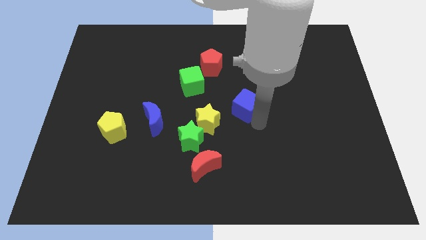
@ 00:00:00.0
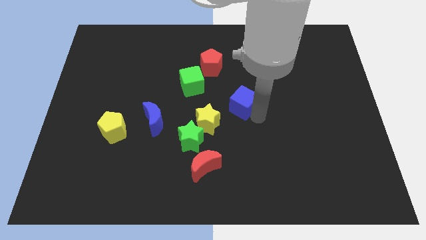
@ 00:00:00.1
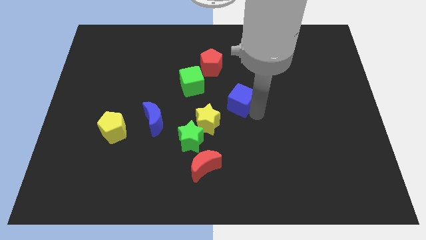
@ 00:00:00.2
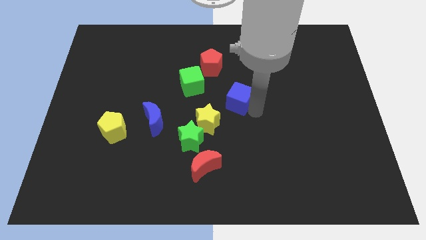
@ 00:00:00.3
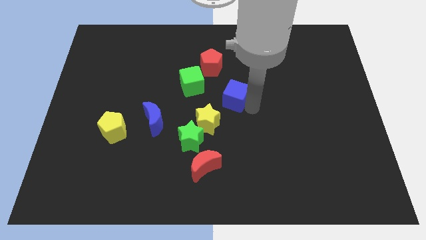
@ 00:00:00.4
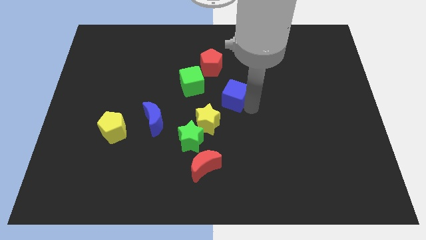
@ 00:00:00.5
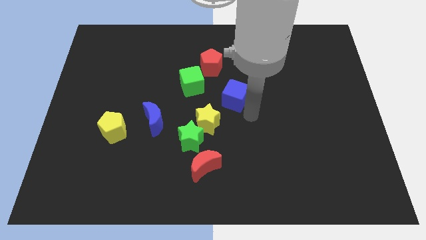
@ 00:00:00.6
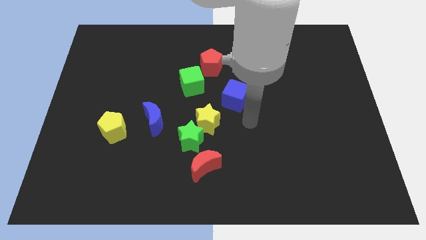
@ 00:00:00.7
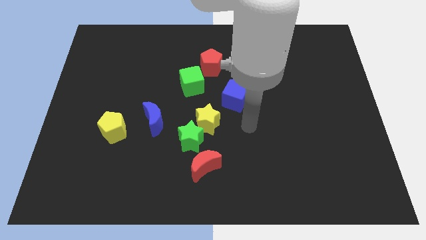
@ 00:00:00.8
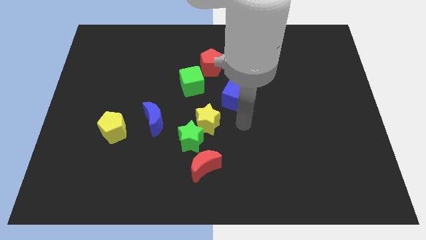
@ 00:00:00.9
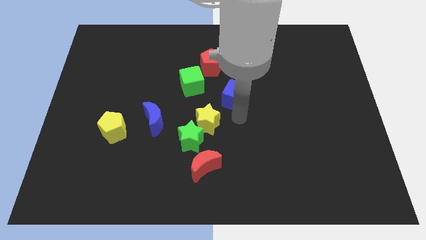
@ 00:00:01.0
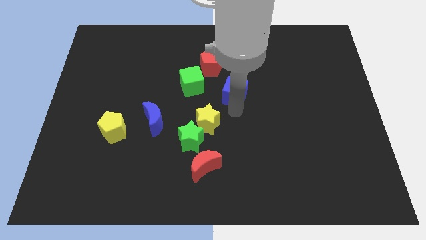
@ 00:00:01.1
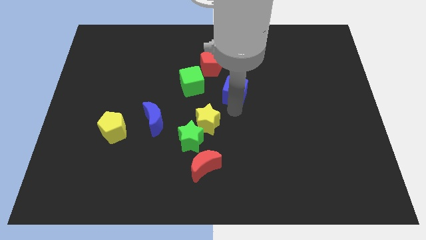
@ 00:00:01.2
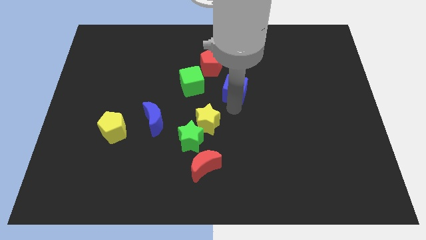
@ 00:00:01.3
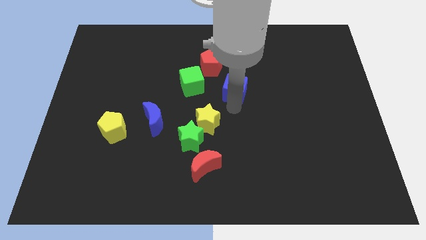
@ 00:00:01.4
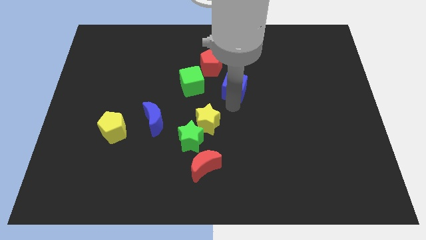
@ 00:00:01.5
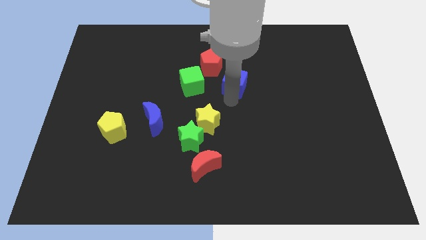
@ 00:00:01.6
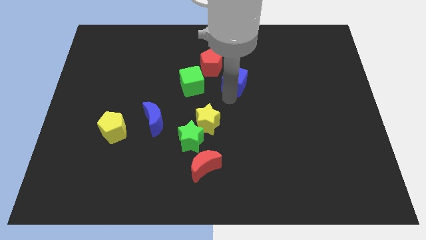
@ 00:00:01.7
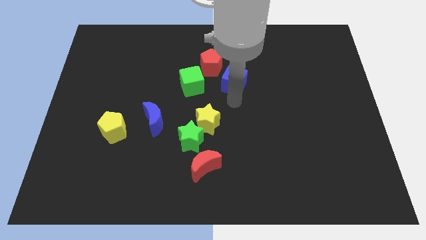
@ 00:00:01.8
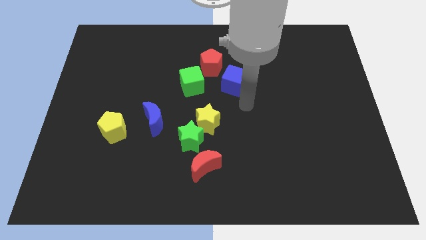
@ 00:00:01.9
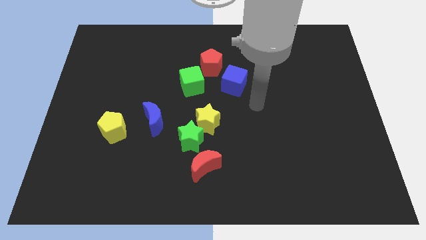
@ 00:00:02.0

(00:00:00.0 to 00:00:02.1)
put the blue cube on the right side of the green cube

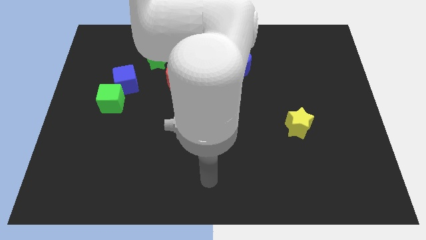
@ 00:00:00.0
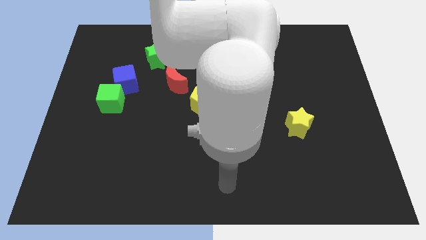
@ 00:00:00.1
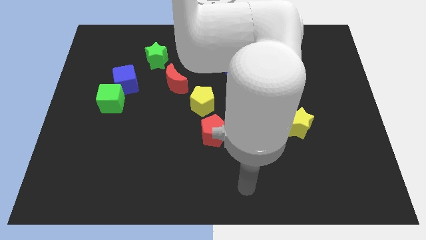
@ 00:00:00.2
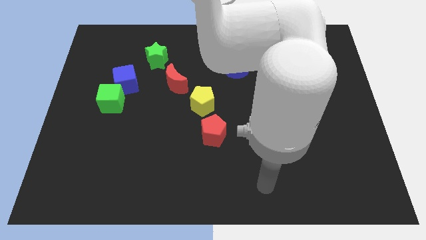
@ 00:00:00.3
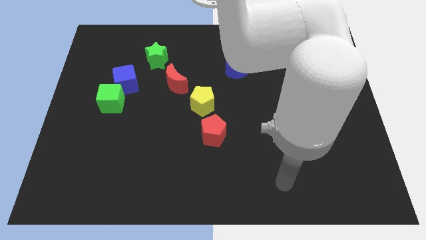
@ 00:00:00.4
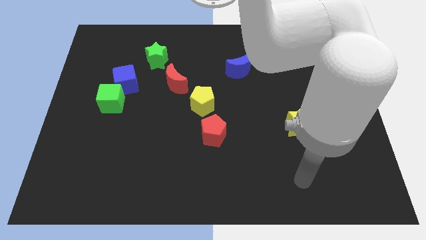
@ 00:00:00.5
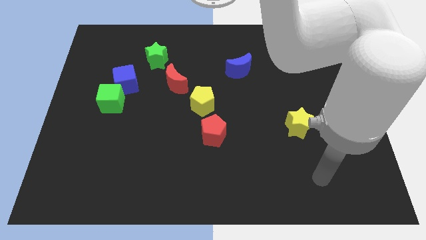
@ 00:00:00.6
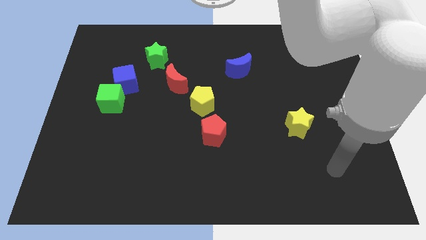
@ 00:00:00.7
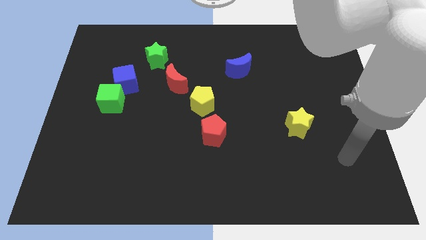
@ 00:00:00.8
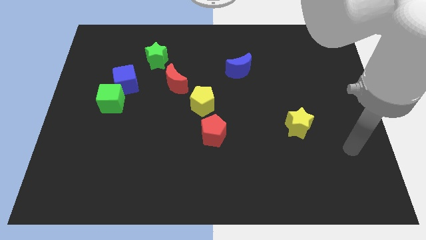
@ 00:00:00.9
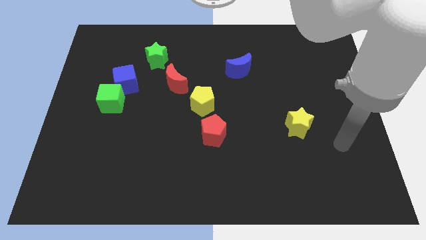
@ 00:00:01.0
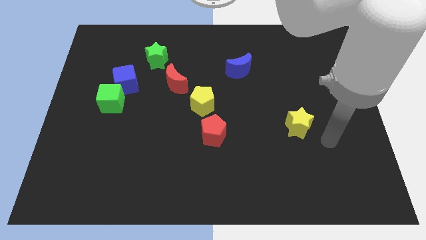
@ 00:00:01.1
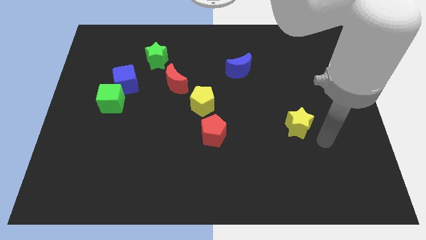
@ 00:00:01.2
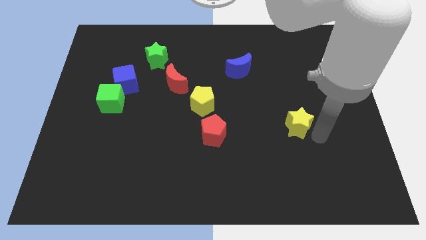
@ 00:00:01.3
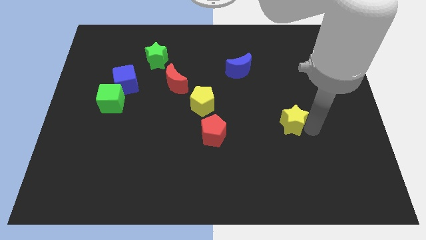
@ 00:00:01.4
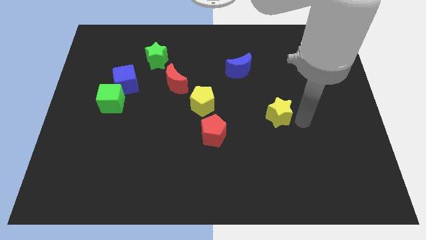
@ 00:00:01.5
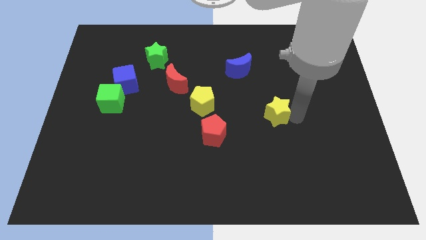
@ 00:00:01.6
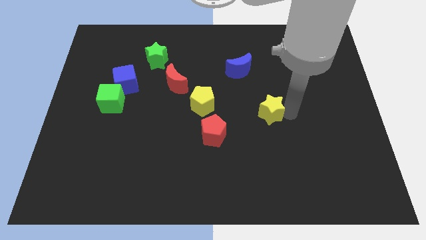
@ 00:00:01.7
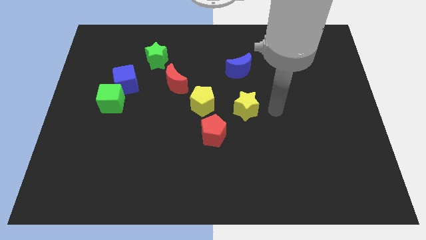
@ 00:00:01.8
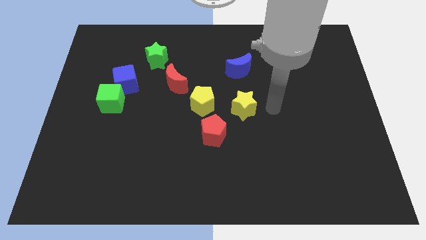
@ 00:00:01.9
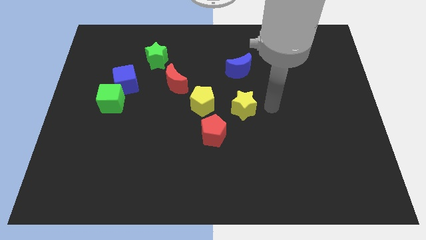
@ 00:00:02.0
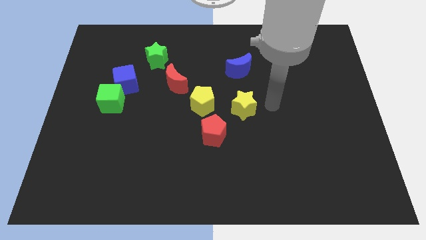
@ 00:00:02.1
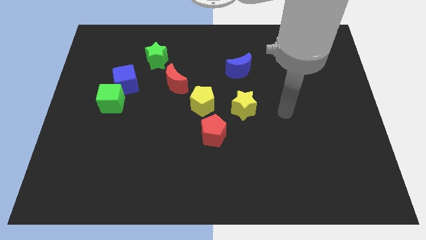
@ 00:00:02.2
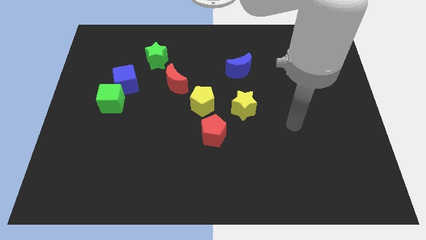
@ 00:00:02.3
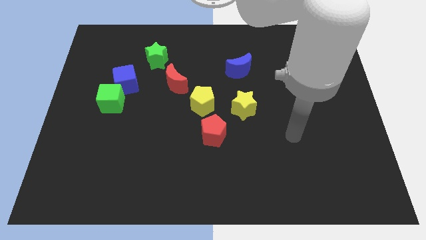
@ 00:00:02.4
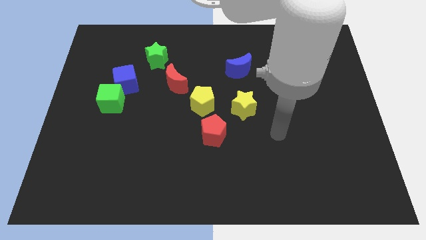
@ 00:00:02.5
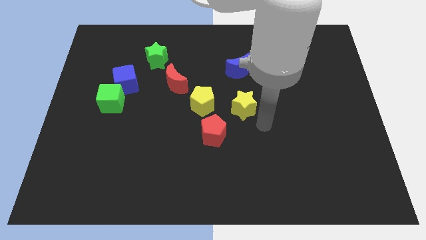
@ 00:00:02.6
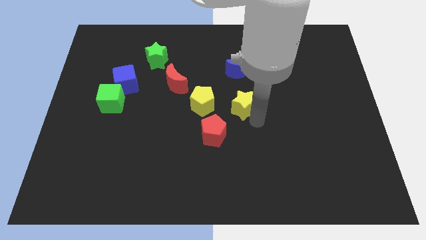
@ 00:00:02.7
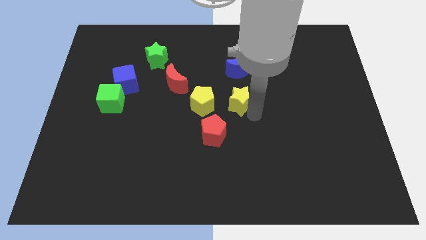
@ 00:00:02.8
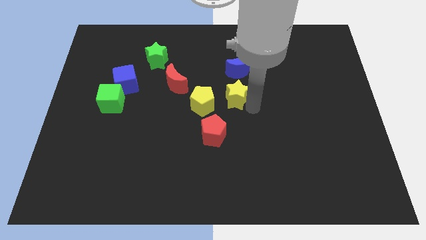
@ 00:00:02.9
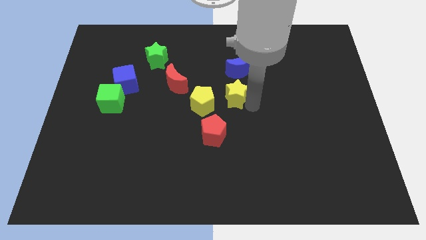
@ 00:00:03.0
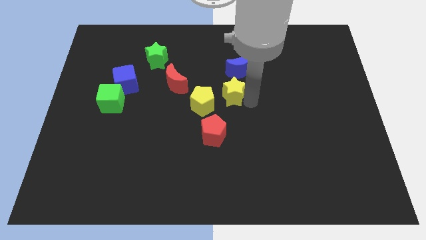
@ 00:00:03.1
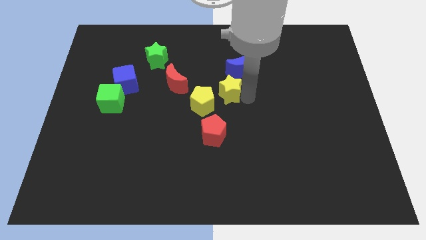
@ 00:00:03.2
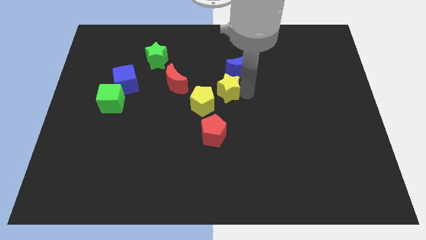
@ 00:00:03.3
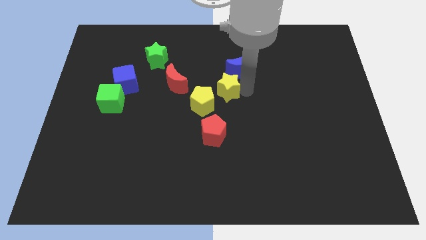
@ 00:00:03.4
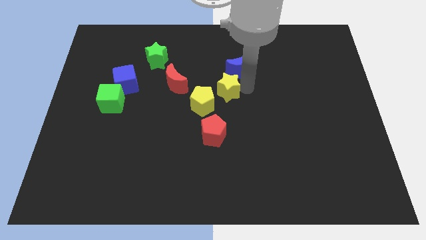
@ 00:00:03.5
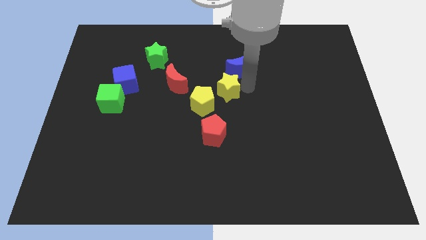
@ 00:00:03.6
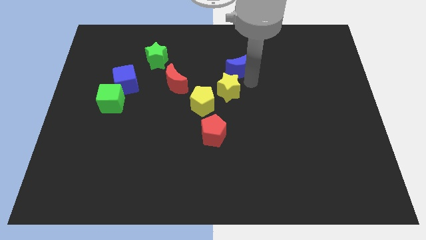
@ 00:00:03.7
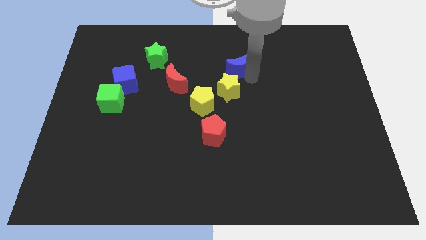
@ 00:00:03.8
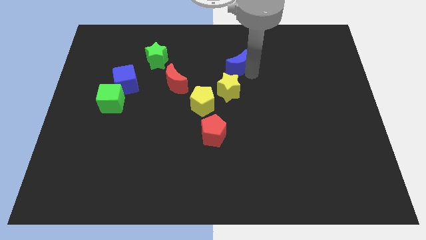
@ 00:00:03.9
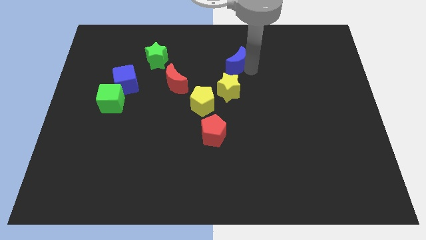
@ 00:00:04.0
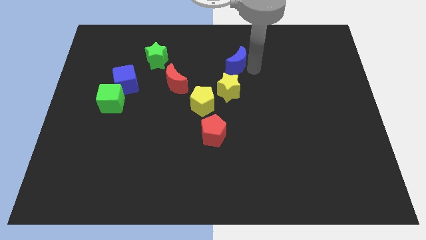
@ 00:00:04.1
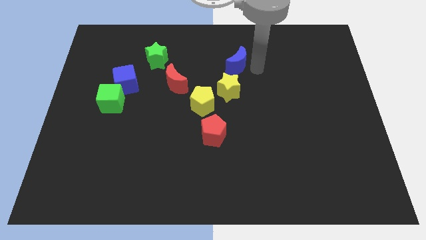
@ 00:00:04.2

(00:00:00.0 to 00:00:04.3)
push the yellow star close to the yellow pentagon

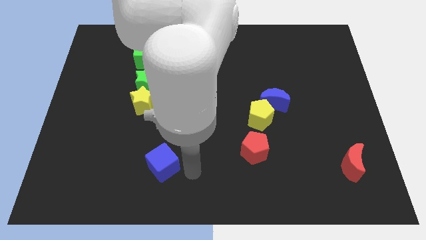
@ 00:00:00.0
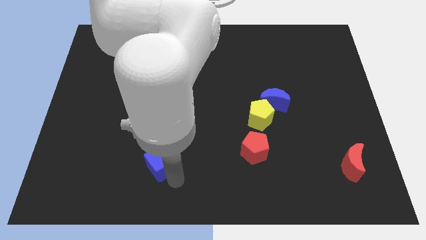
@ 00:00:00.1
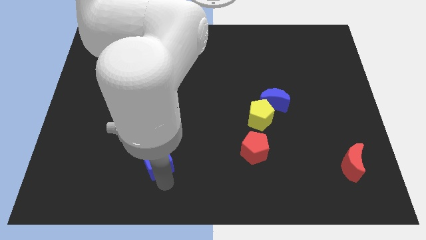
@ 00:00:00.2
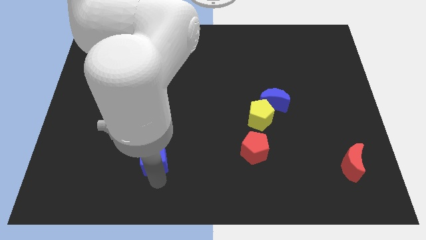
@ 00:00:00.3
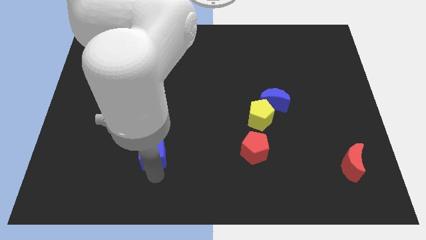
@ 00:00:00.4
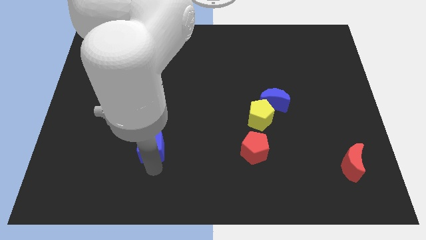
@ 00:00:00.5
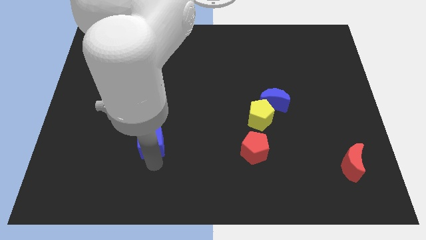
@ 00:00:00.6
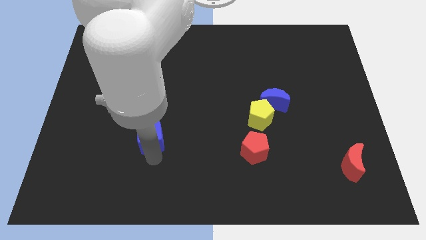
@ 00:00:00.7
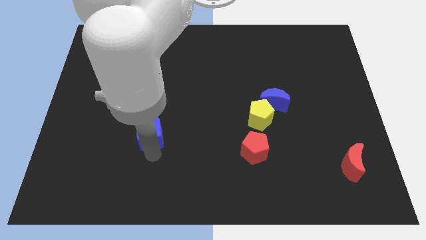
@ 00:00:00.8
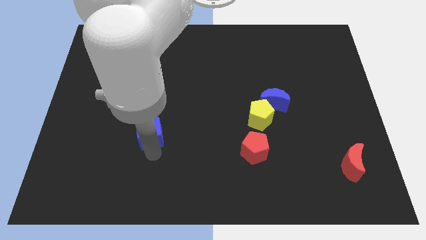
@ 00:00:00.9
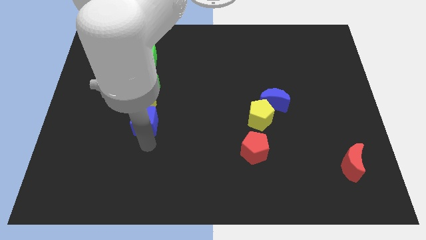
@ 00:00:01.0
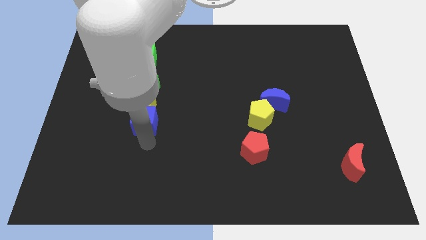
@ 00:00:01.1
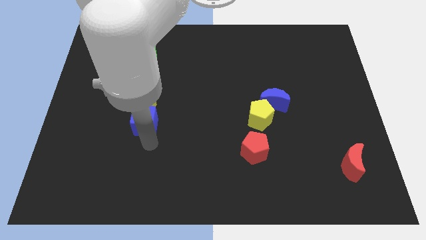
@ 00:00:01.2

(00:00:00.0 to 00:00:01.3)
place blue cube to the bottomof yellow star

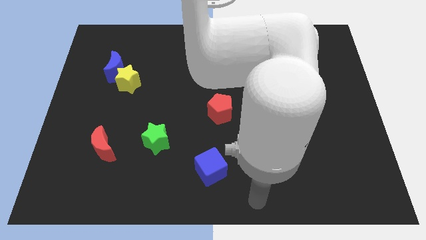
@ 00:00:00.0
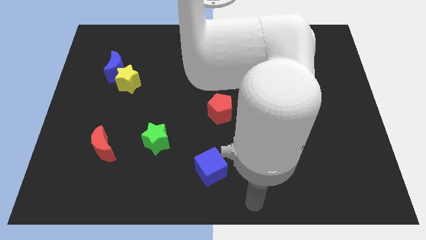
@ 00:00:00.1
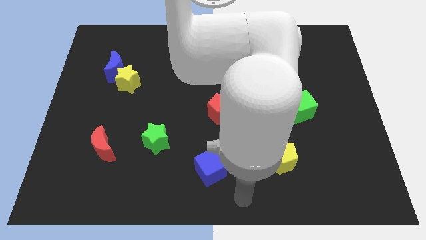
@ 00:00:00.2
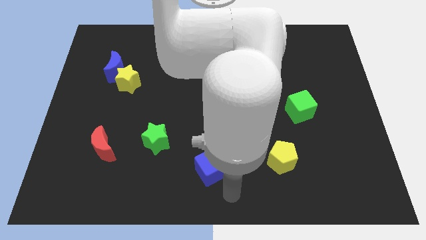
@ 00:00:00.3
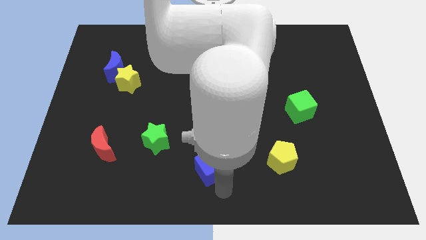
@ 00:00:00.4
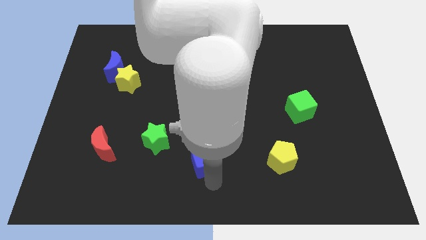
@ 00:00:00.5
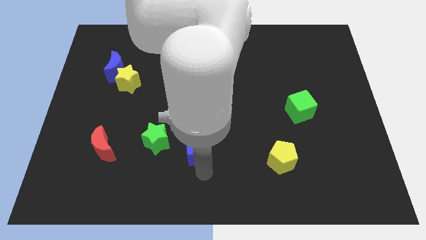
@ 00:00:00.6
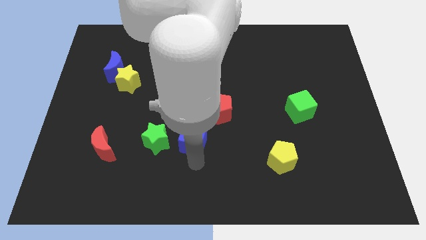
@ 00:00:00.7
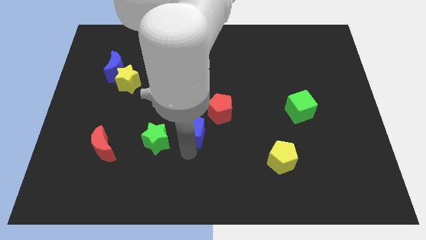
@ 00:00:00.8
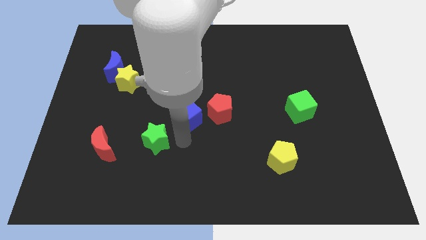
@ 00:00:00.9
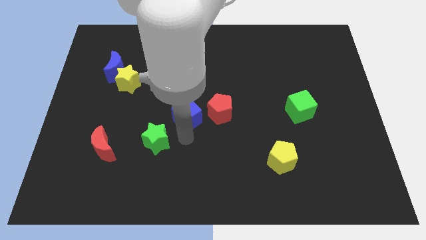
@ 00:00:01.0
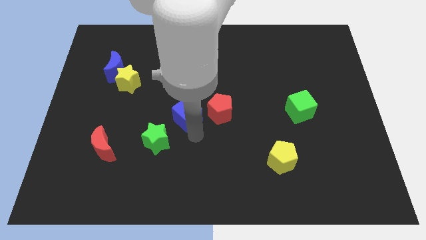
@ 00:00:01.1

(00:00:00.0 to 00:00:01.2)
move the blue cube to the left of the red pentagon
